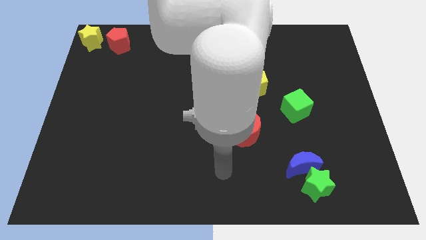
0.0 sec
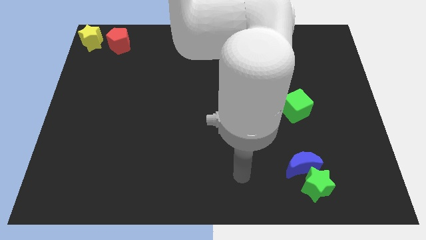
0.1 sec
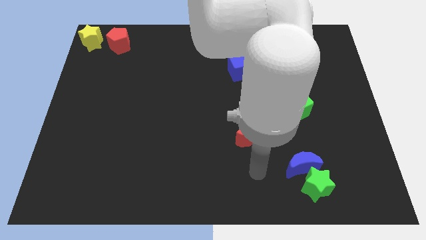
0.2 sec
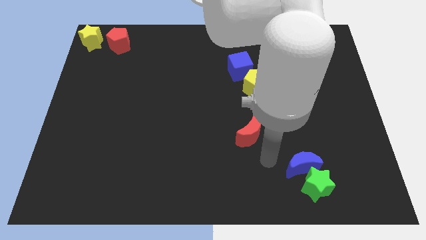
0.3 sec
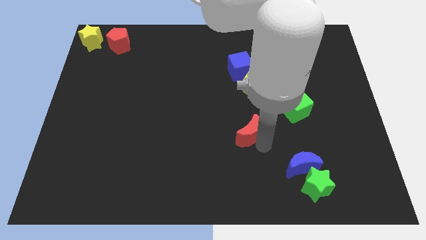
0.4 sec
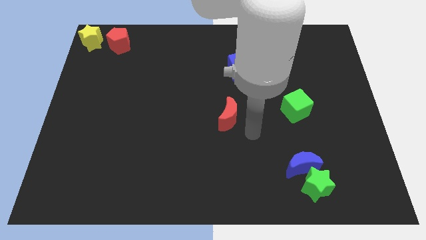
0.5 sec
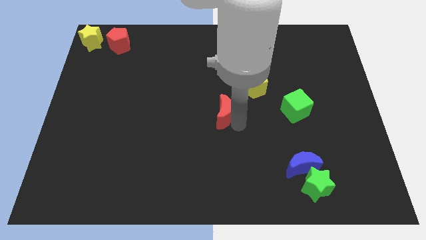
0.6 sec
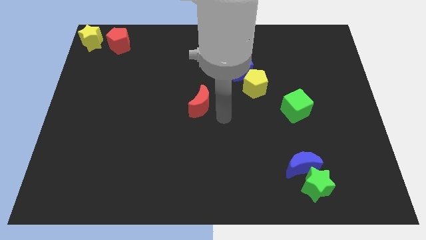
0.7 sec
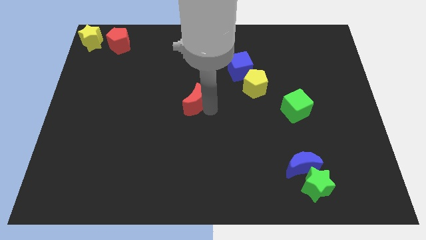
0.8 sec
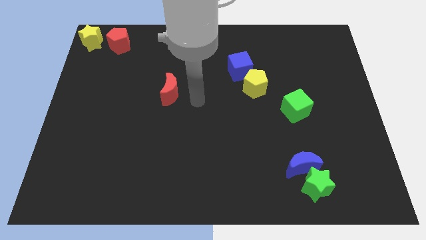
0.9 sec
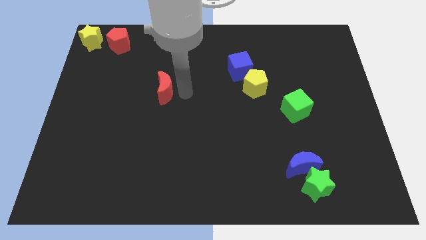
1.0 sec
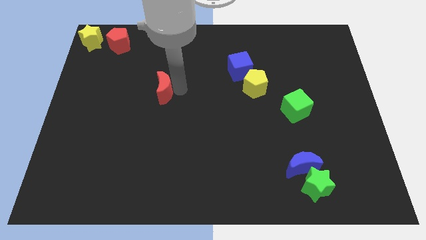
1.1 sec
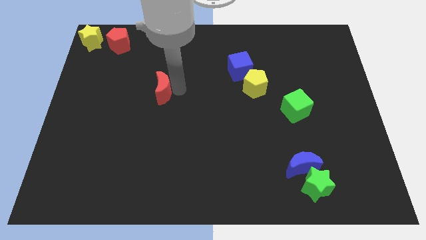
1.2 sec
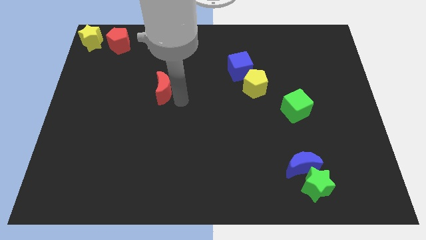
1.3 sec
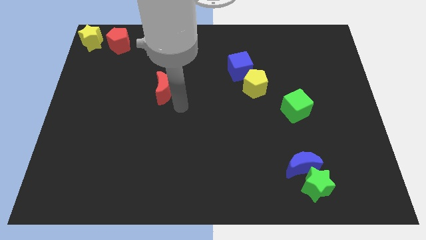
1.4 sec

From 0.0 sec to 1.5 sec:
move the red crescent slightly top left to the board

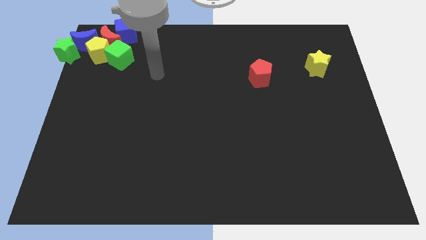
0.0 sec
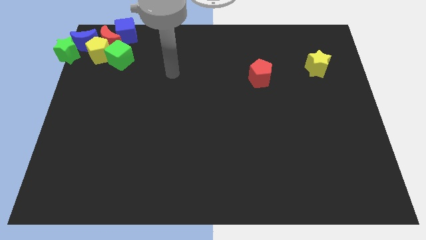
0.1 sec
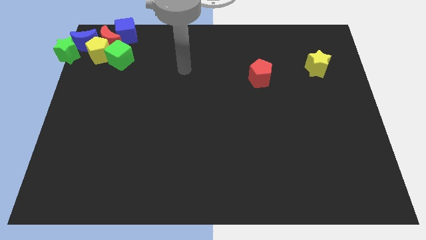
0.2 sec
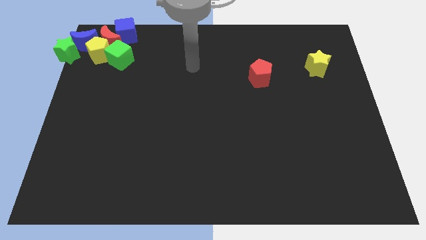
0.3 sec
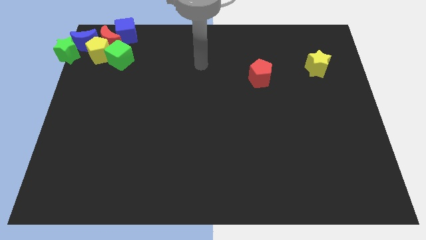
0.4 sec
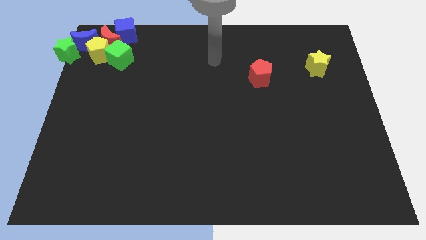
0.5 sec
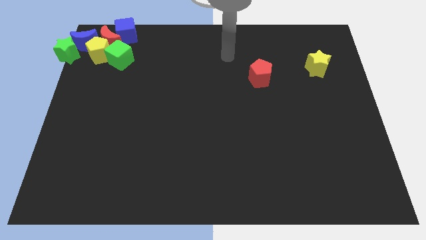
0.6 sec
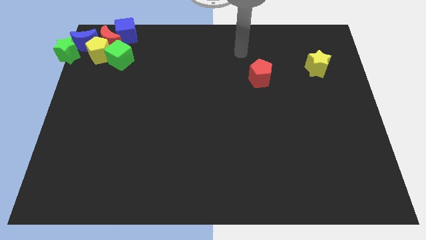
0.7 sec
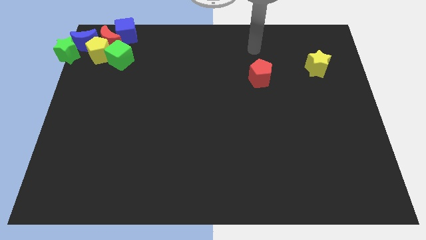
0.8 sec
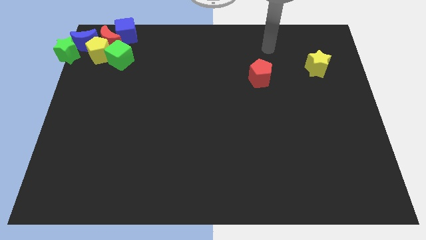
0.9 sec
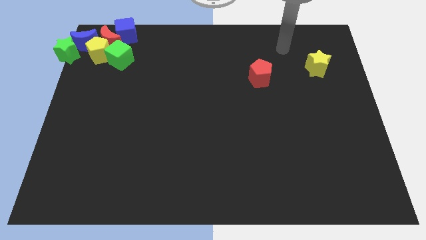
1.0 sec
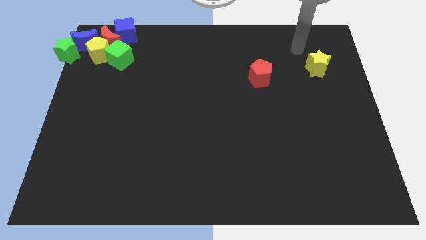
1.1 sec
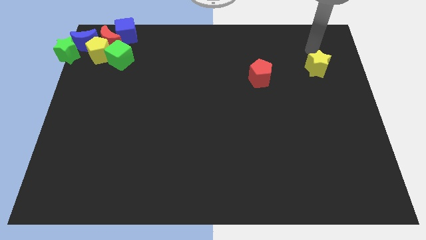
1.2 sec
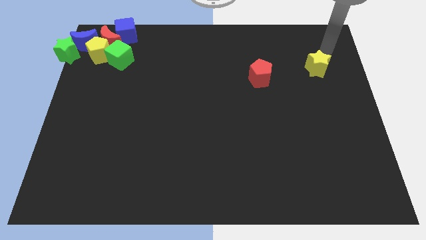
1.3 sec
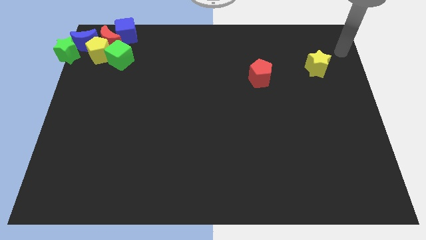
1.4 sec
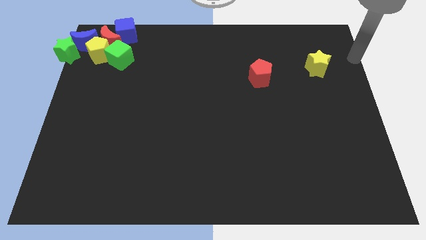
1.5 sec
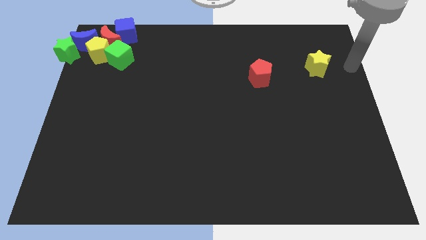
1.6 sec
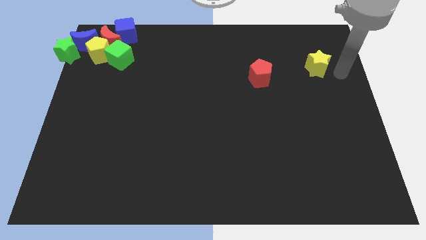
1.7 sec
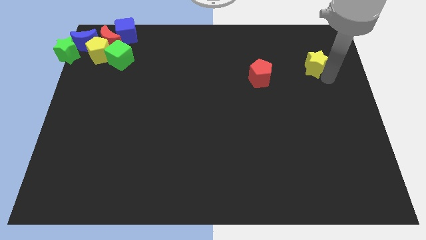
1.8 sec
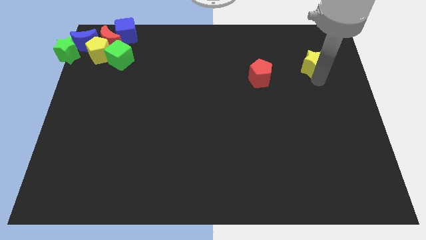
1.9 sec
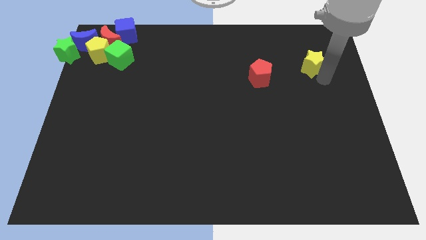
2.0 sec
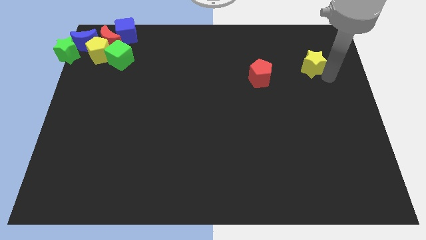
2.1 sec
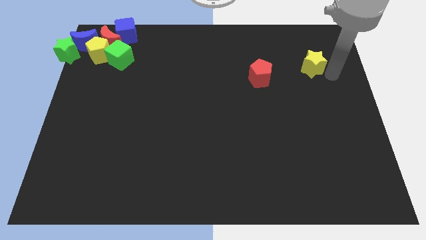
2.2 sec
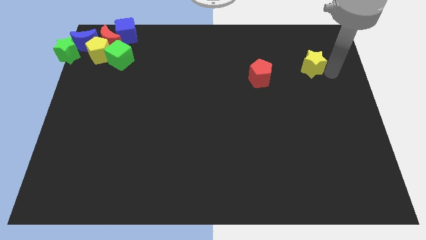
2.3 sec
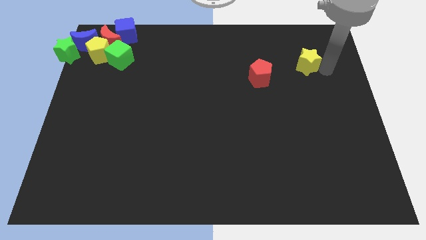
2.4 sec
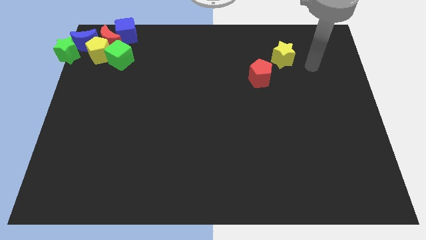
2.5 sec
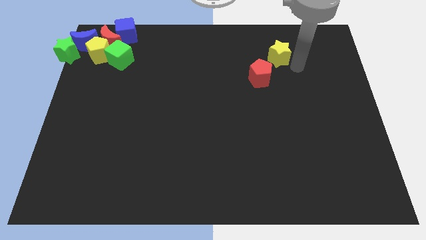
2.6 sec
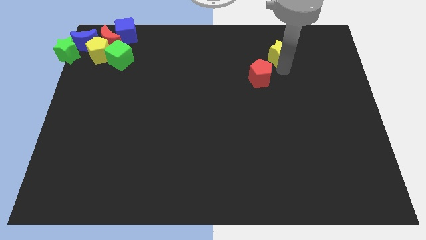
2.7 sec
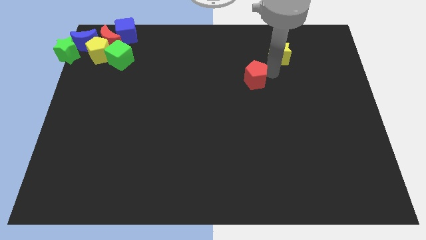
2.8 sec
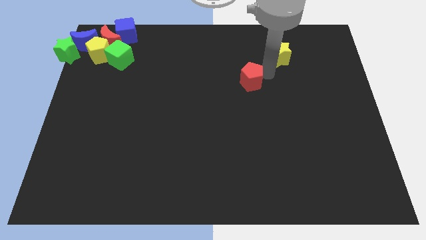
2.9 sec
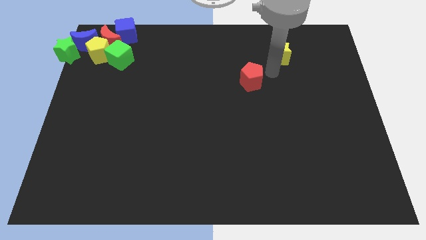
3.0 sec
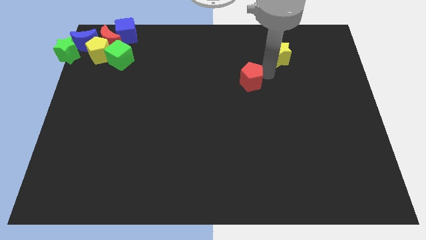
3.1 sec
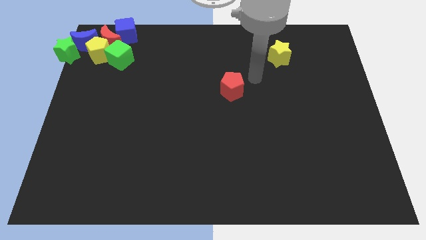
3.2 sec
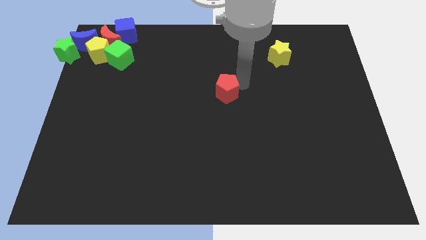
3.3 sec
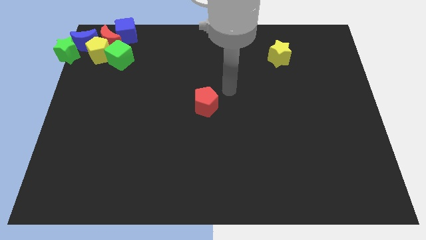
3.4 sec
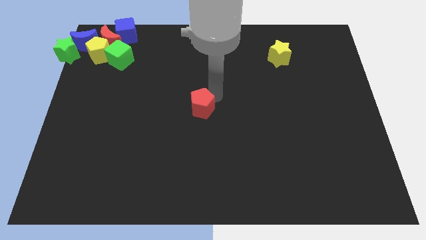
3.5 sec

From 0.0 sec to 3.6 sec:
place the red pentagon to the center of the board

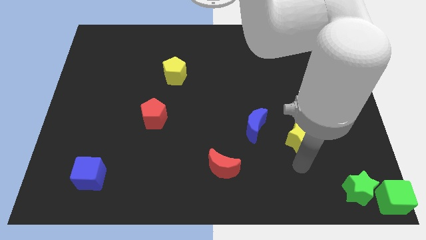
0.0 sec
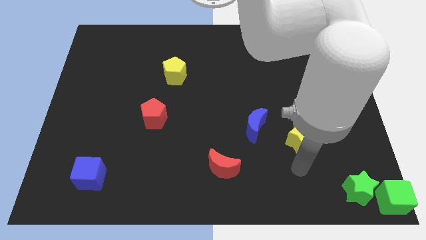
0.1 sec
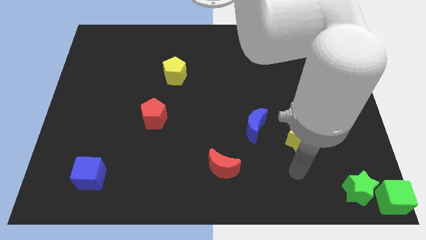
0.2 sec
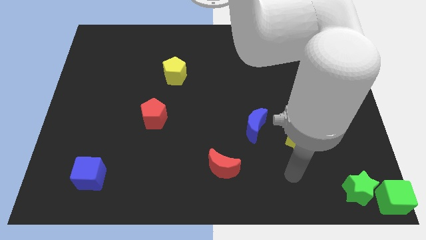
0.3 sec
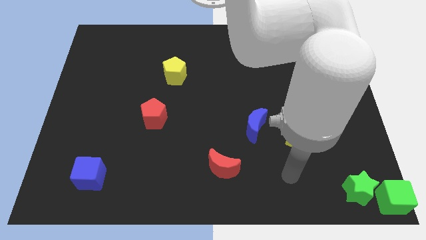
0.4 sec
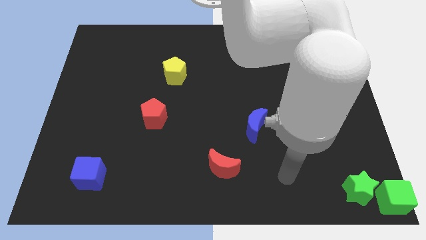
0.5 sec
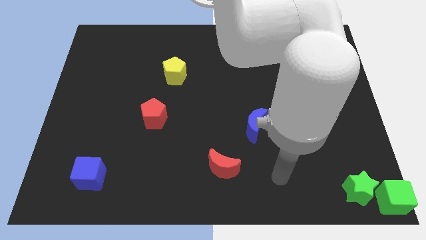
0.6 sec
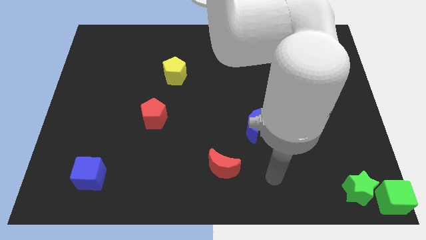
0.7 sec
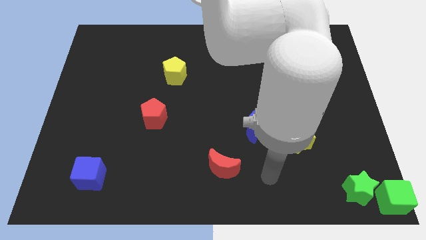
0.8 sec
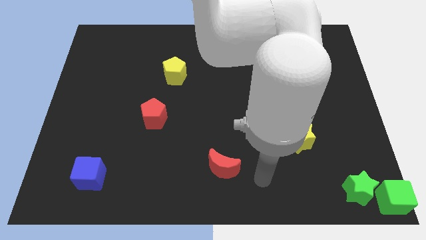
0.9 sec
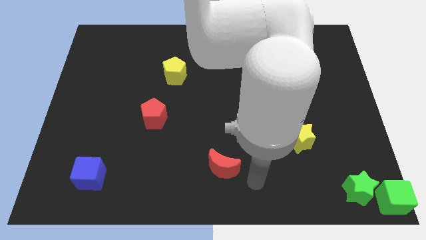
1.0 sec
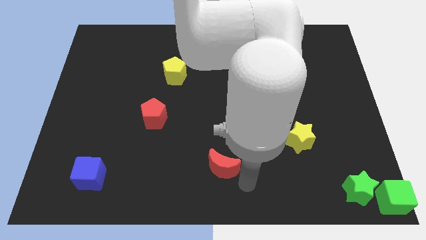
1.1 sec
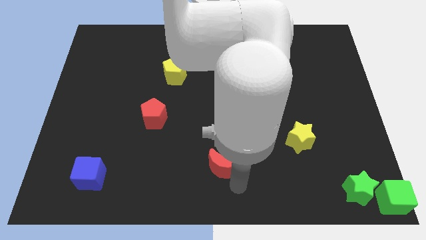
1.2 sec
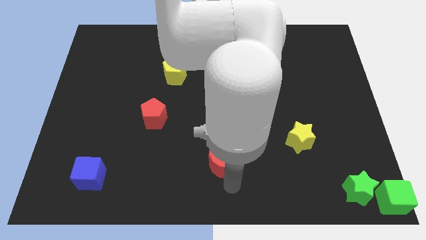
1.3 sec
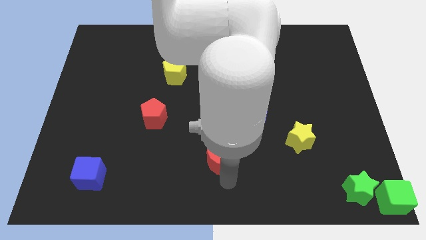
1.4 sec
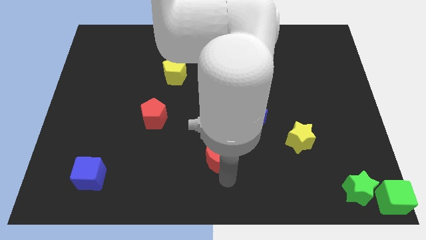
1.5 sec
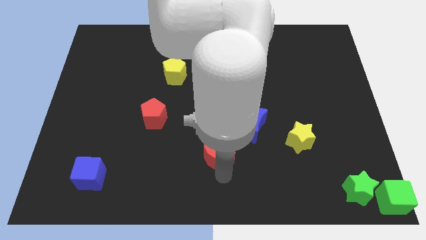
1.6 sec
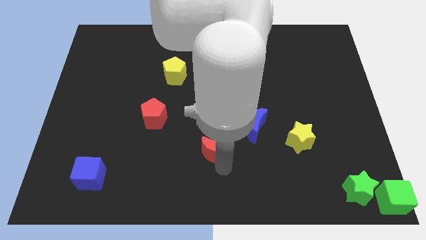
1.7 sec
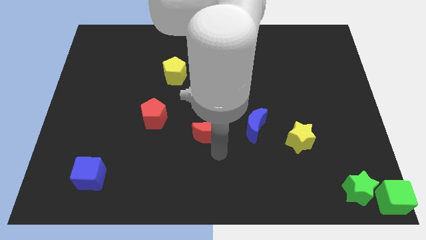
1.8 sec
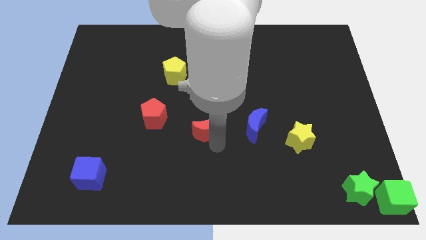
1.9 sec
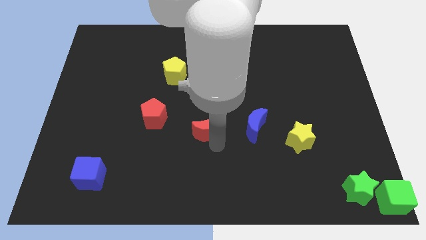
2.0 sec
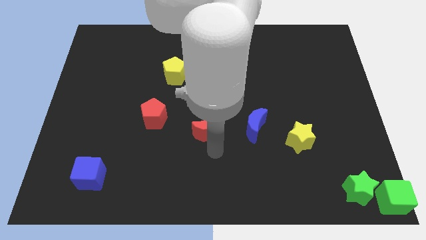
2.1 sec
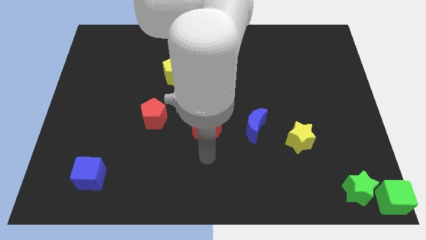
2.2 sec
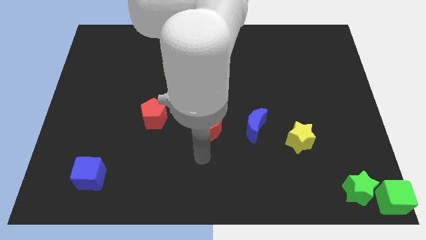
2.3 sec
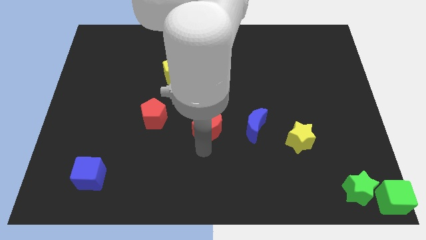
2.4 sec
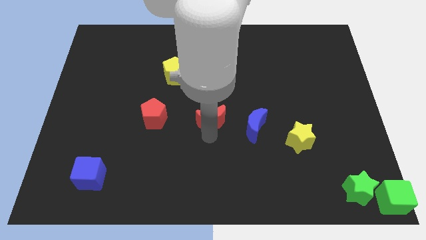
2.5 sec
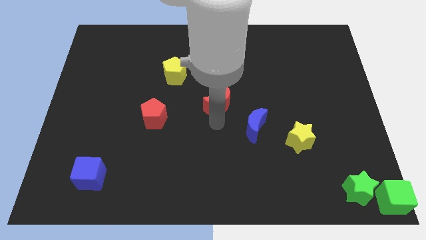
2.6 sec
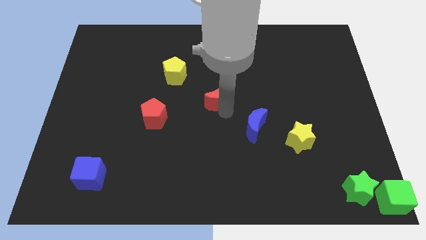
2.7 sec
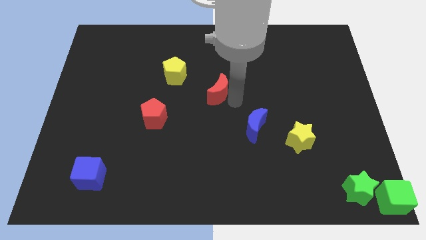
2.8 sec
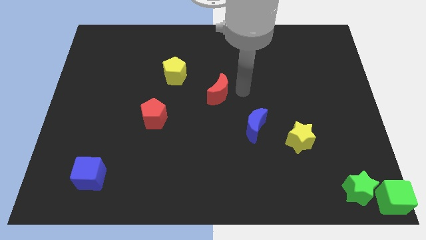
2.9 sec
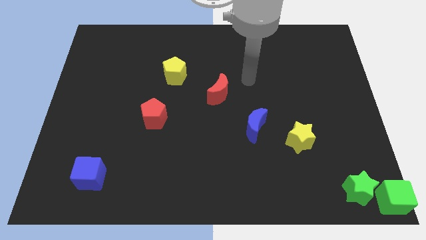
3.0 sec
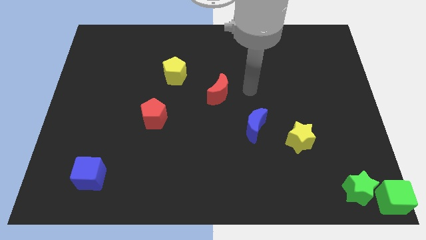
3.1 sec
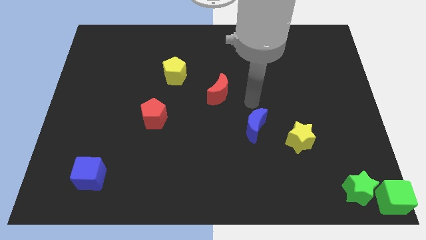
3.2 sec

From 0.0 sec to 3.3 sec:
push red moon towards middle of the board

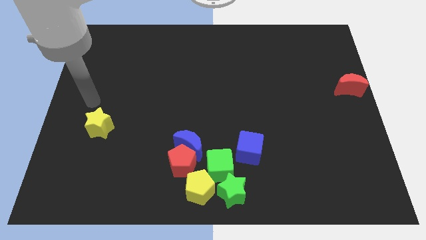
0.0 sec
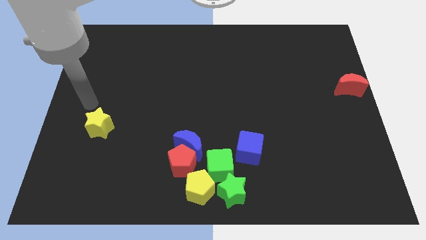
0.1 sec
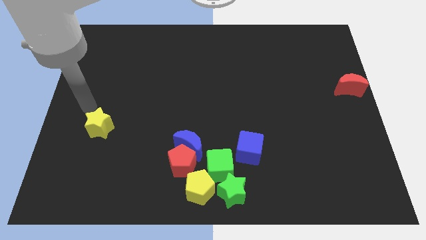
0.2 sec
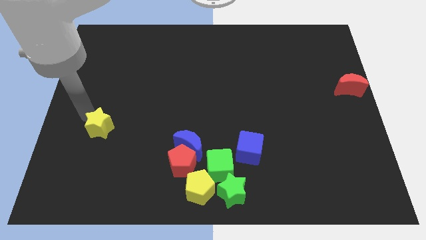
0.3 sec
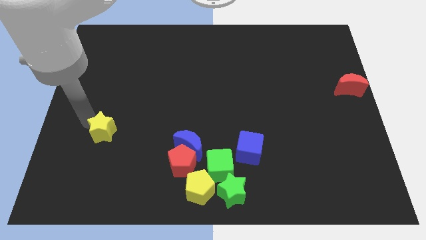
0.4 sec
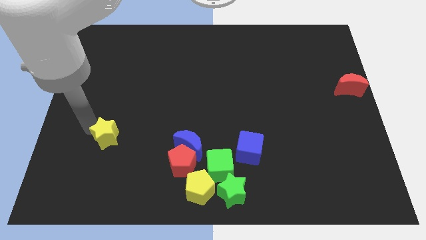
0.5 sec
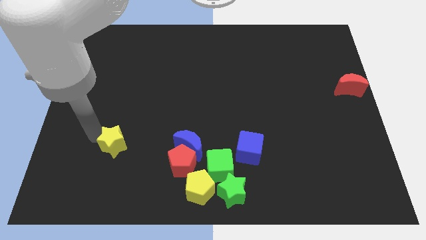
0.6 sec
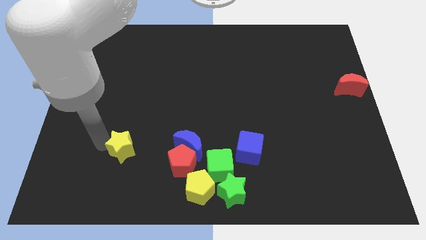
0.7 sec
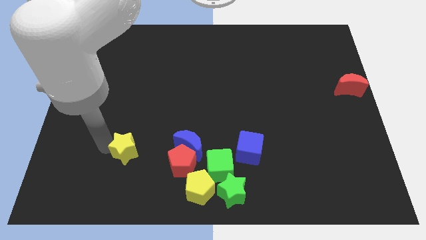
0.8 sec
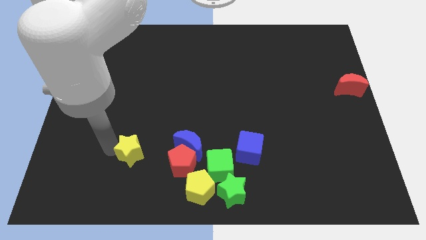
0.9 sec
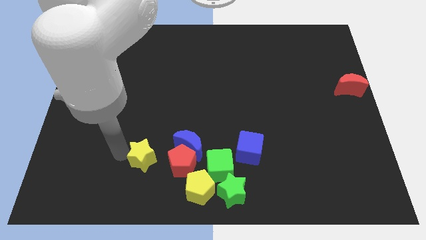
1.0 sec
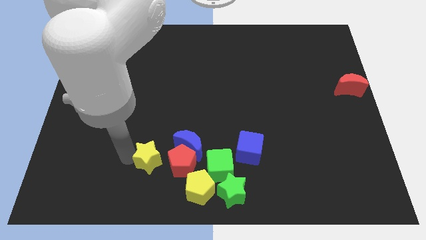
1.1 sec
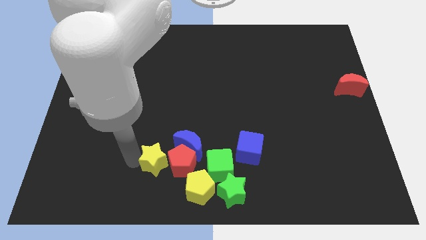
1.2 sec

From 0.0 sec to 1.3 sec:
place the yellow star left the red pentagon
